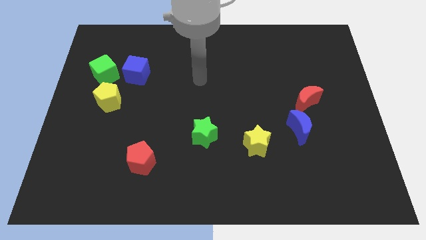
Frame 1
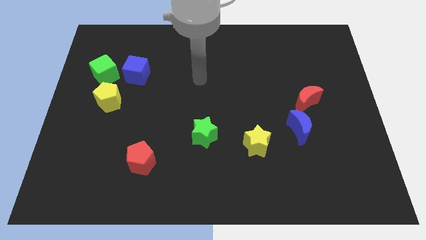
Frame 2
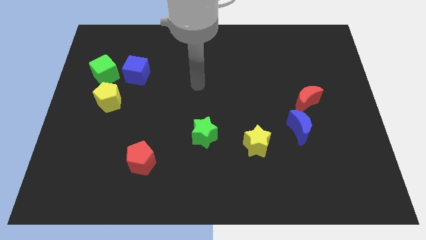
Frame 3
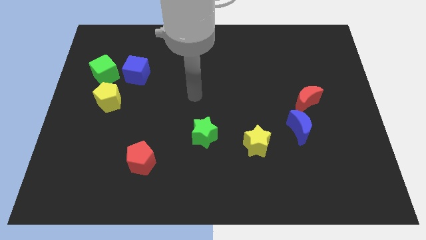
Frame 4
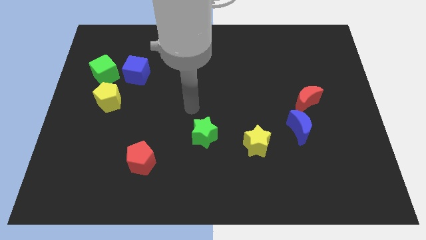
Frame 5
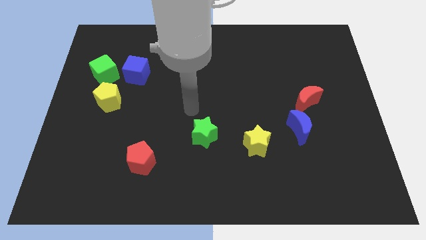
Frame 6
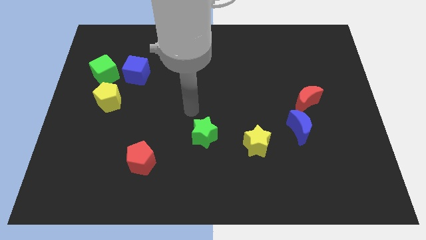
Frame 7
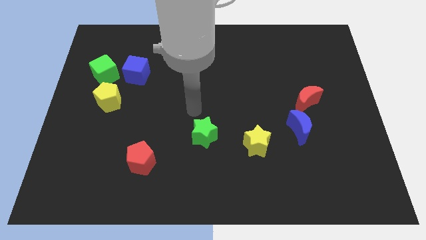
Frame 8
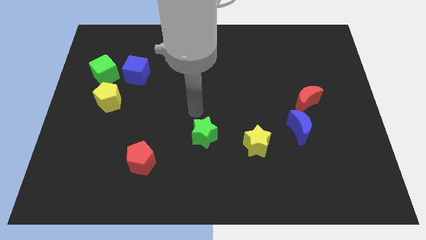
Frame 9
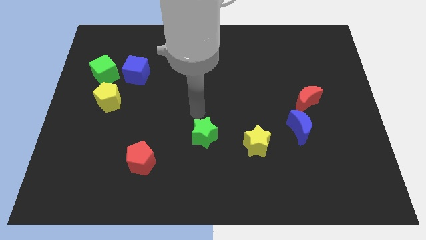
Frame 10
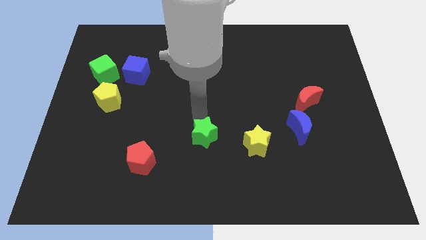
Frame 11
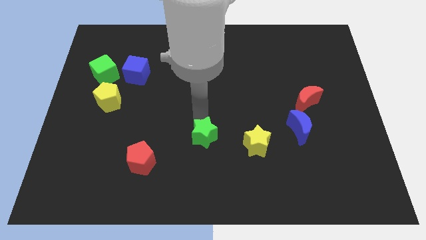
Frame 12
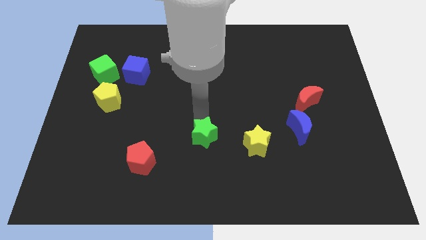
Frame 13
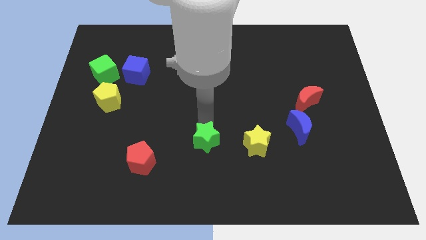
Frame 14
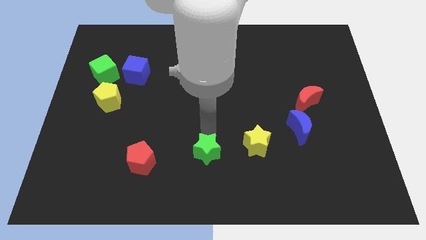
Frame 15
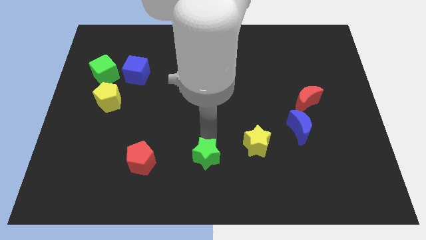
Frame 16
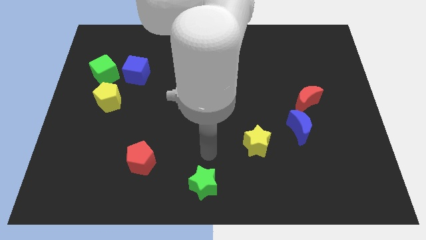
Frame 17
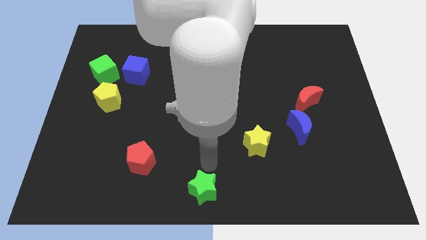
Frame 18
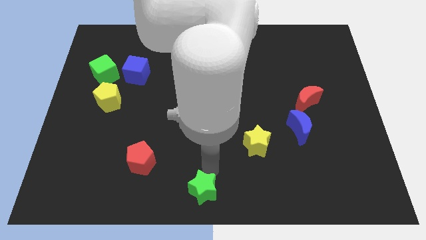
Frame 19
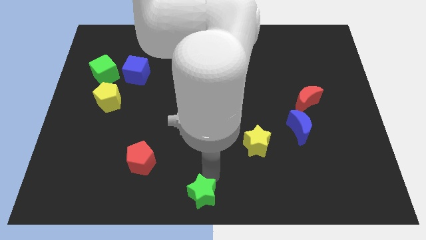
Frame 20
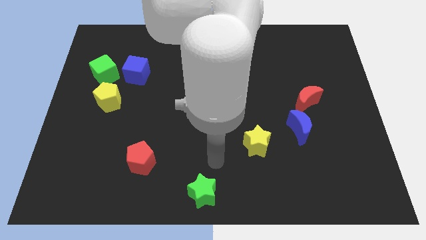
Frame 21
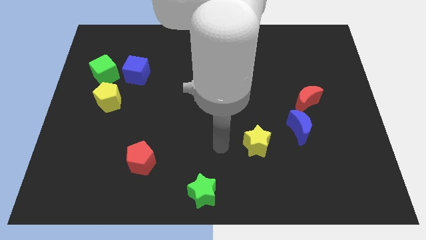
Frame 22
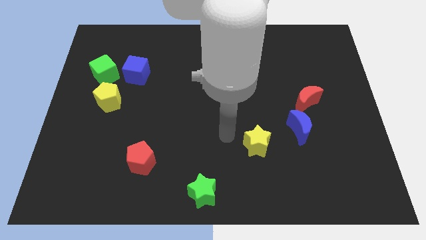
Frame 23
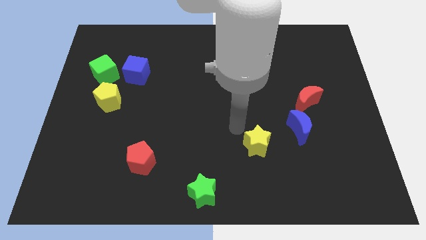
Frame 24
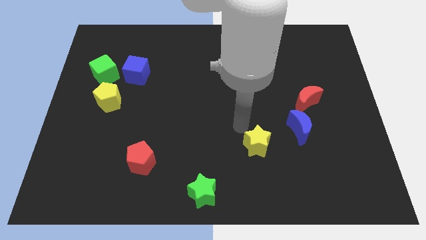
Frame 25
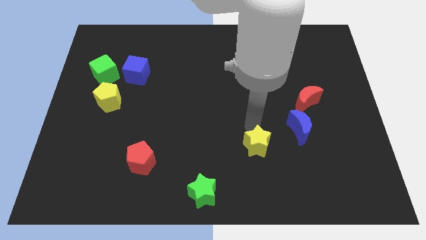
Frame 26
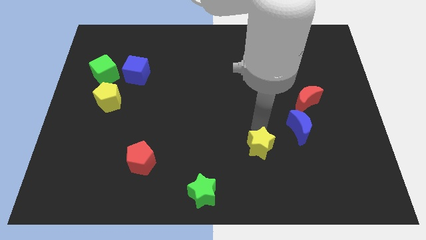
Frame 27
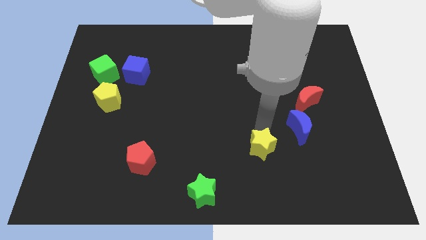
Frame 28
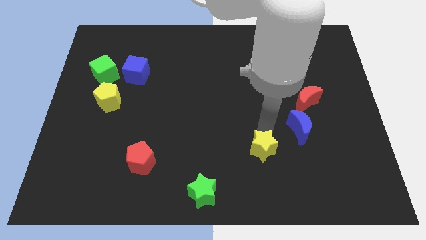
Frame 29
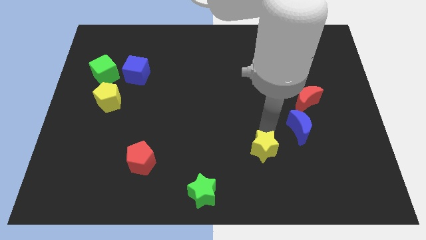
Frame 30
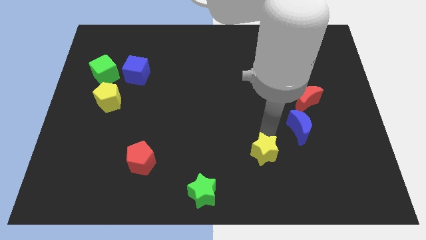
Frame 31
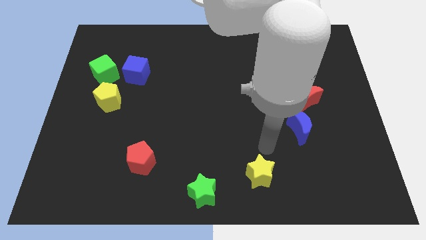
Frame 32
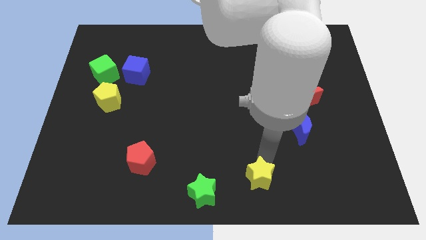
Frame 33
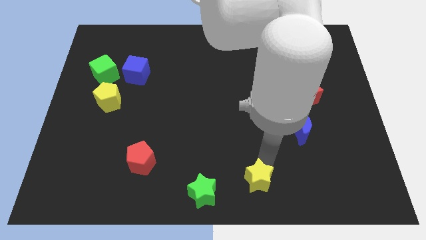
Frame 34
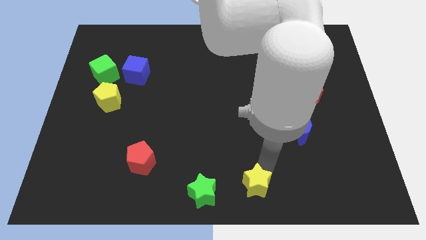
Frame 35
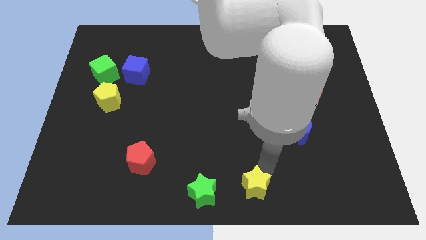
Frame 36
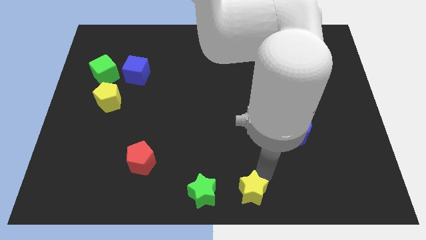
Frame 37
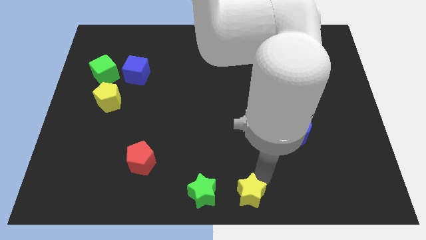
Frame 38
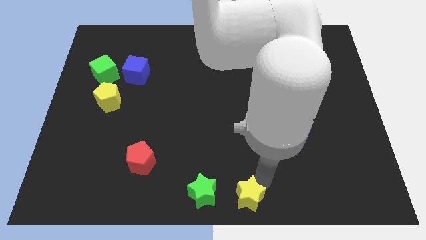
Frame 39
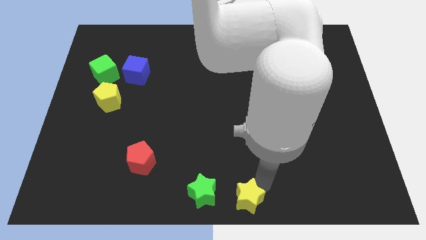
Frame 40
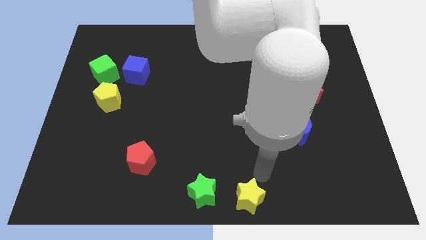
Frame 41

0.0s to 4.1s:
move green star yellow star towards the bottom center of the board

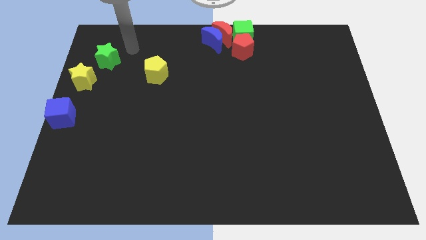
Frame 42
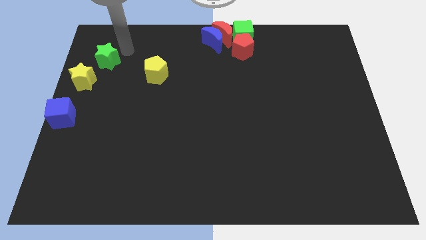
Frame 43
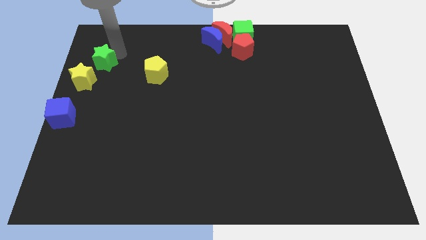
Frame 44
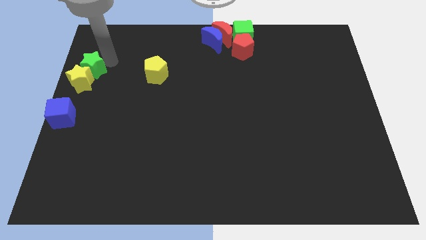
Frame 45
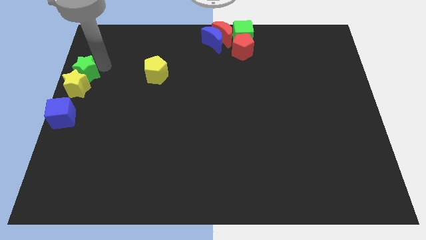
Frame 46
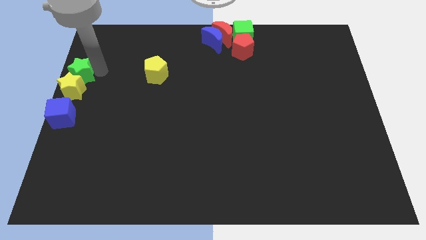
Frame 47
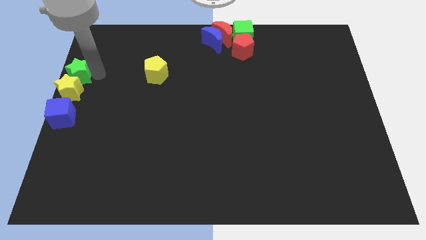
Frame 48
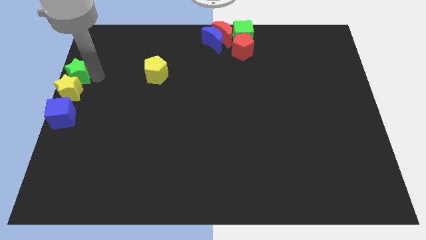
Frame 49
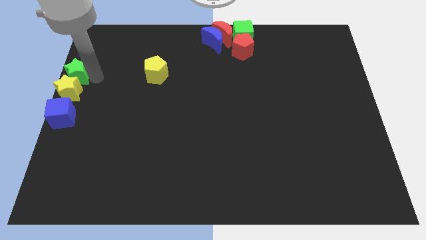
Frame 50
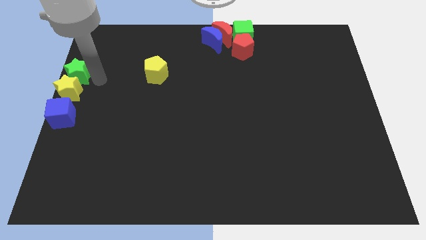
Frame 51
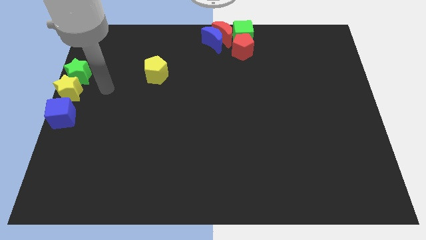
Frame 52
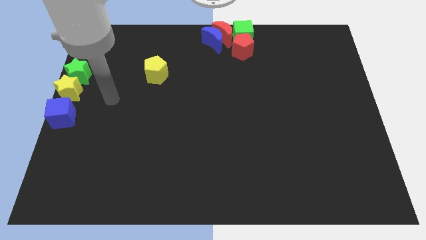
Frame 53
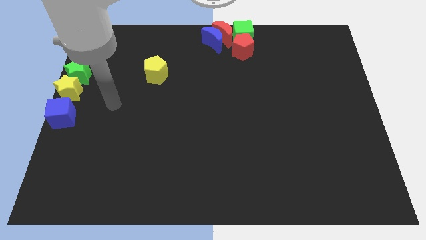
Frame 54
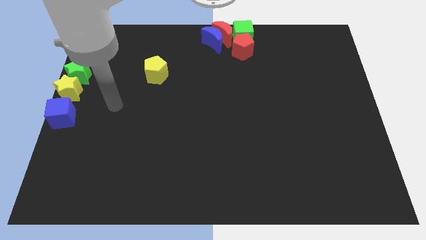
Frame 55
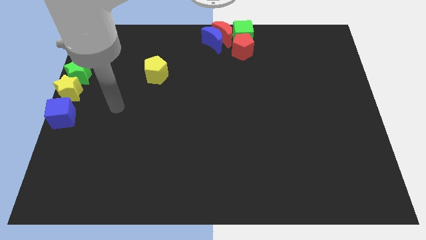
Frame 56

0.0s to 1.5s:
move the green star into the yellow star above the blue cube

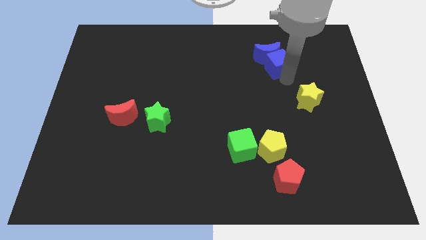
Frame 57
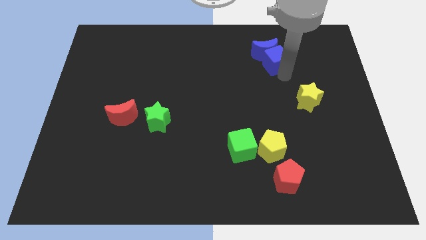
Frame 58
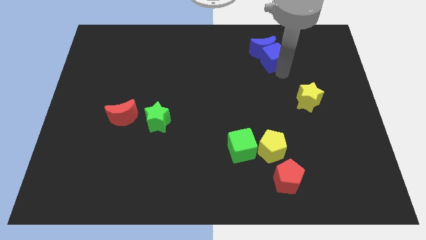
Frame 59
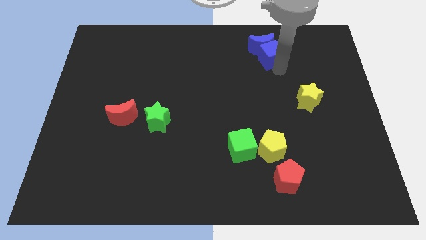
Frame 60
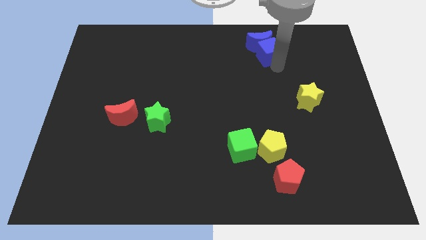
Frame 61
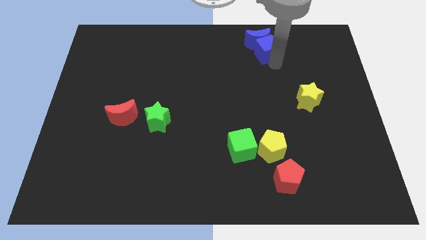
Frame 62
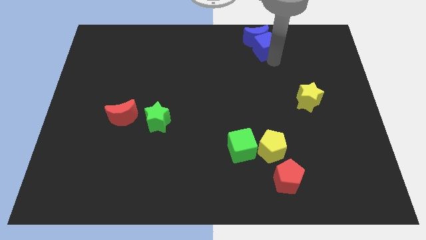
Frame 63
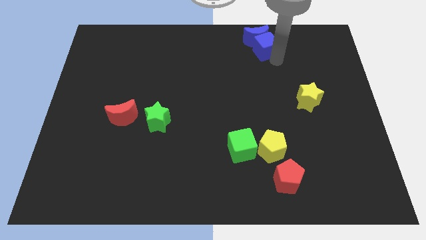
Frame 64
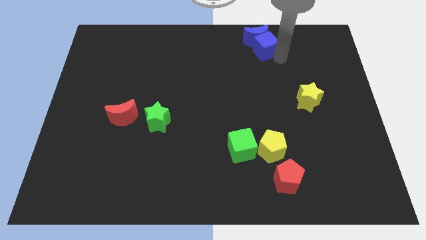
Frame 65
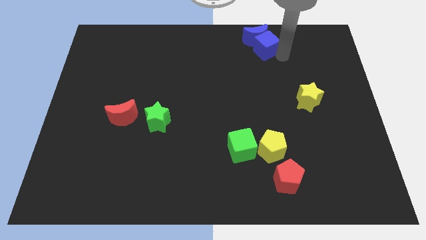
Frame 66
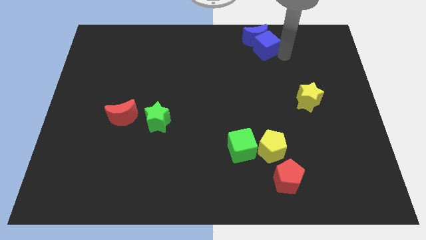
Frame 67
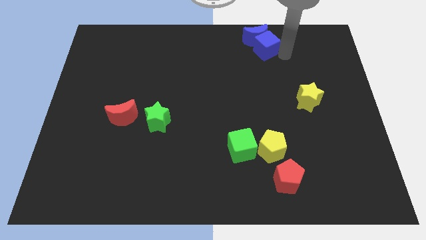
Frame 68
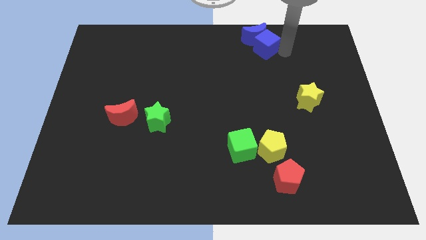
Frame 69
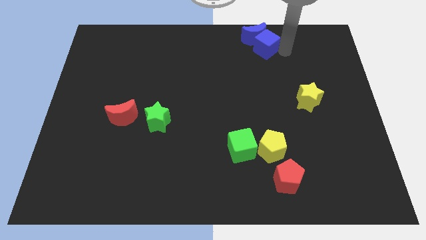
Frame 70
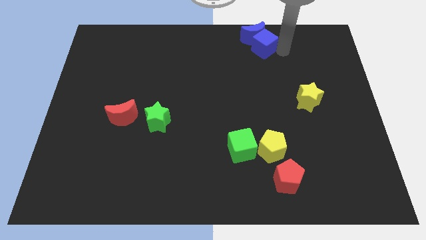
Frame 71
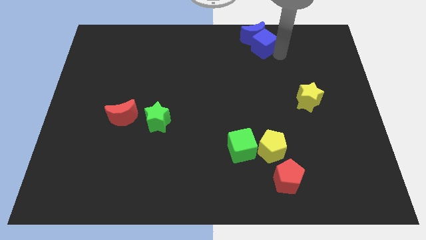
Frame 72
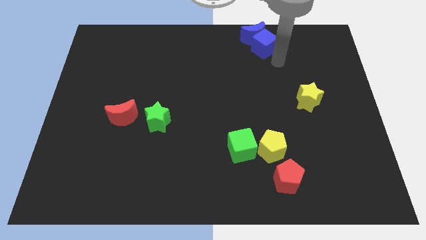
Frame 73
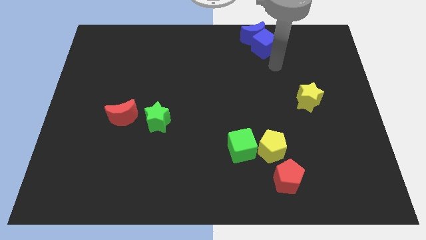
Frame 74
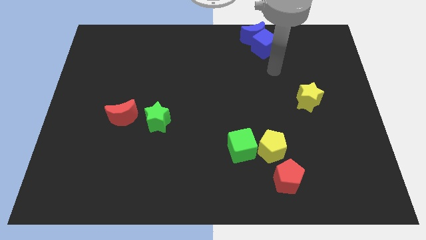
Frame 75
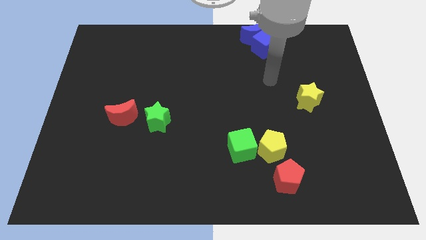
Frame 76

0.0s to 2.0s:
push the blue cube and blue moon to the top of the board

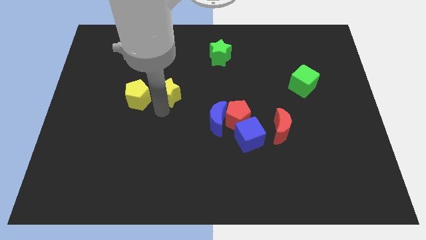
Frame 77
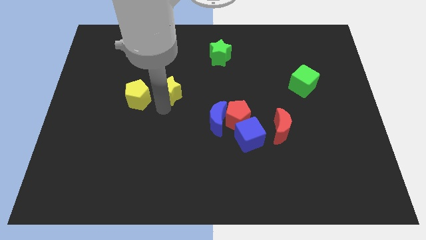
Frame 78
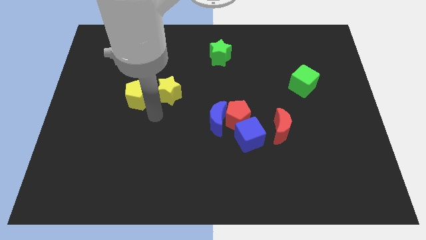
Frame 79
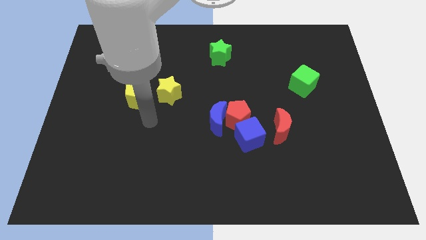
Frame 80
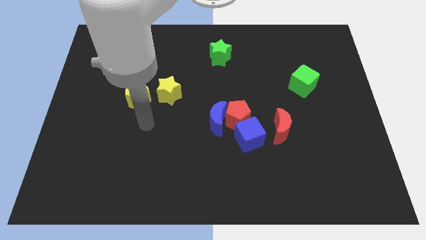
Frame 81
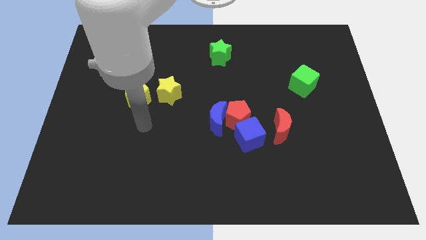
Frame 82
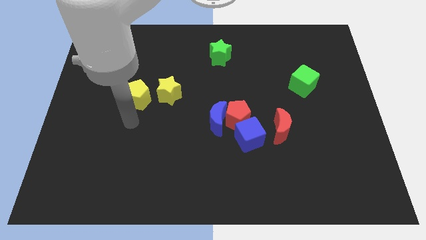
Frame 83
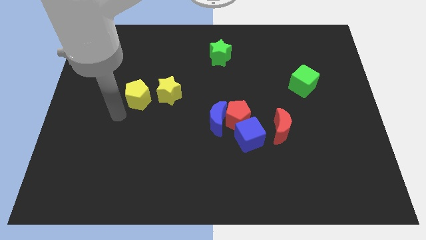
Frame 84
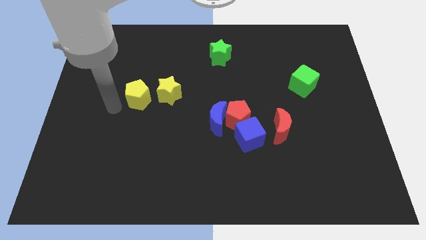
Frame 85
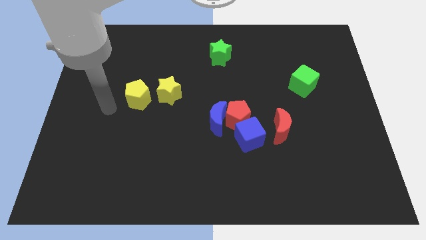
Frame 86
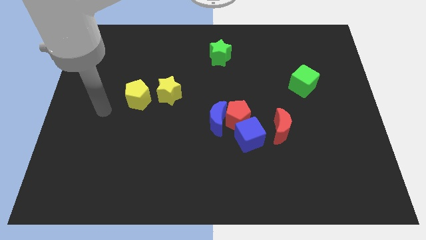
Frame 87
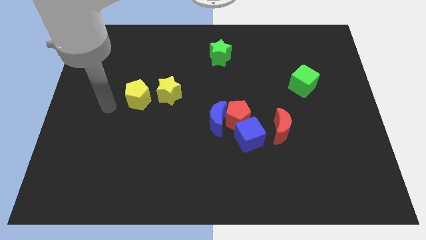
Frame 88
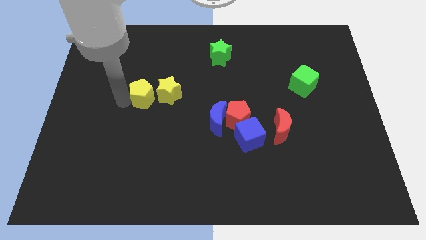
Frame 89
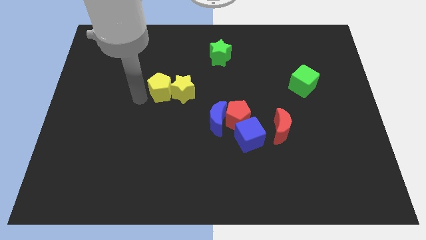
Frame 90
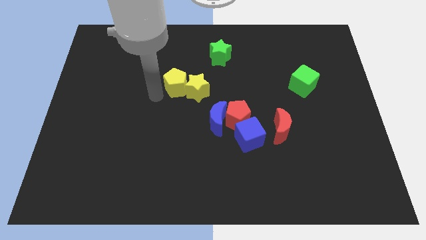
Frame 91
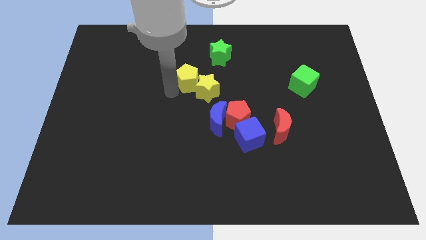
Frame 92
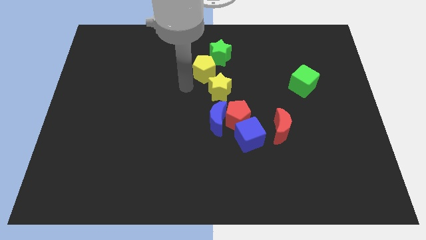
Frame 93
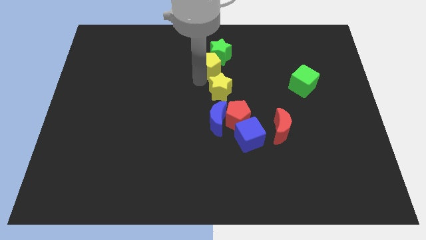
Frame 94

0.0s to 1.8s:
move the yellow blocks below the green star
